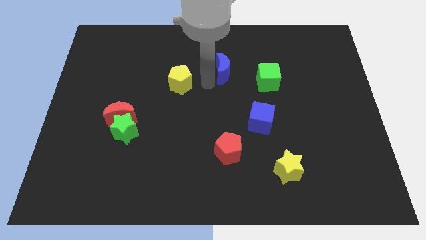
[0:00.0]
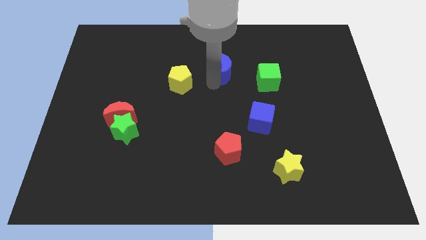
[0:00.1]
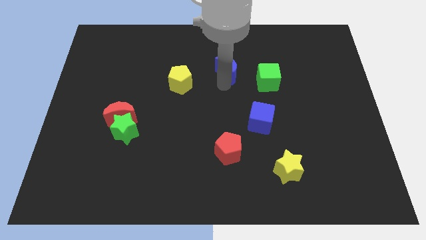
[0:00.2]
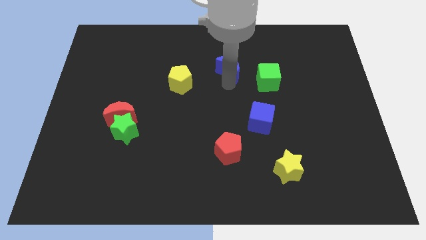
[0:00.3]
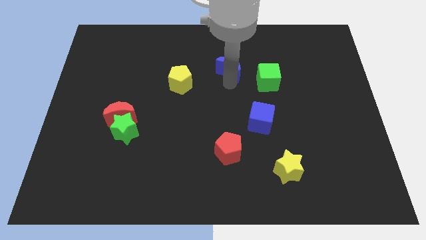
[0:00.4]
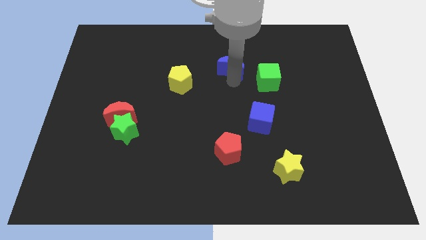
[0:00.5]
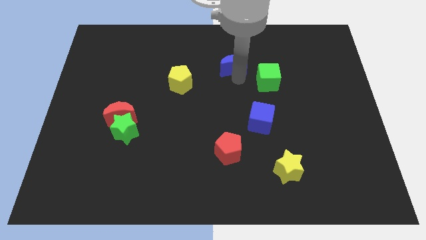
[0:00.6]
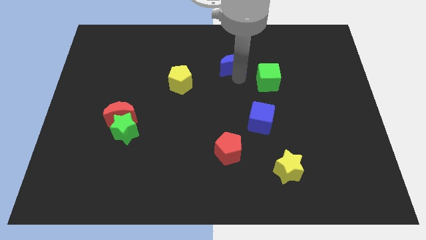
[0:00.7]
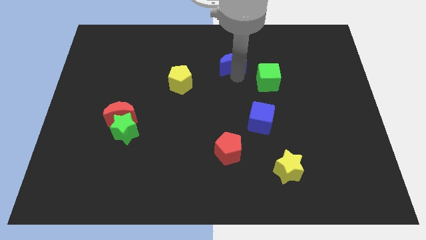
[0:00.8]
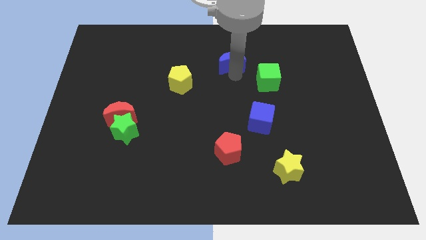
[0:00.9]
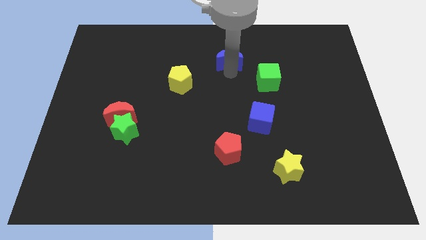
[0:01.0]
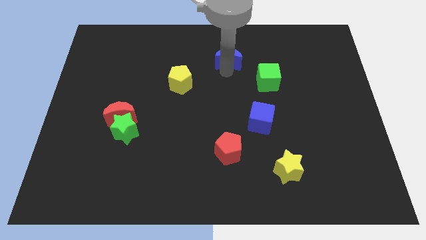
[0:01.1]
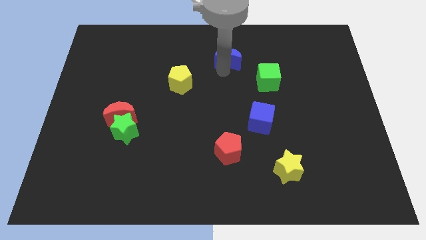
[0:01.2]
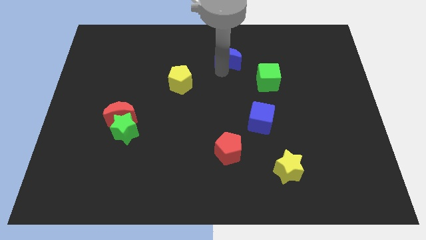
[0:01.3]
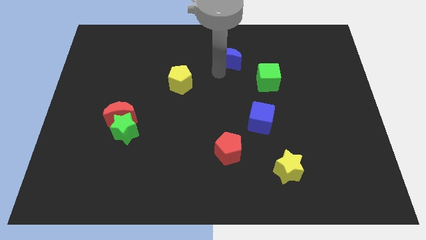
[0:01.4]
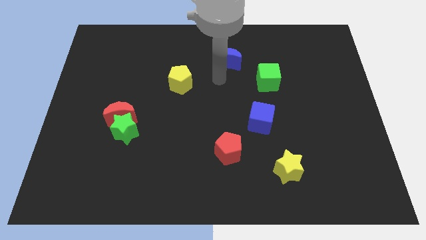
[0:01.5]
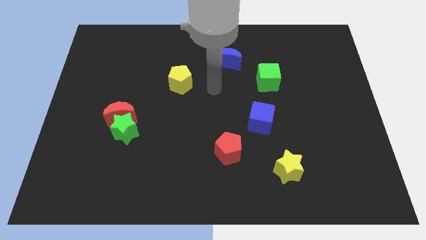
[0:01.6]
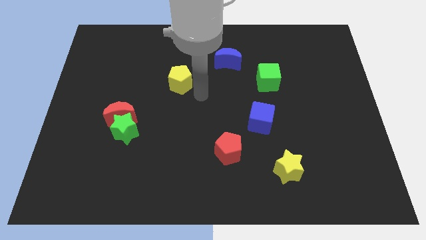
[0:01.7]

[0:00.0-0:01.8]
slightly push the blue crescent to the top of the board

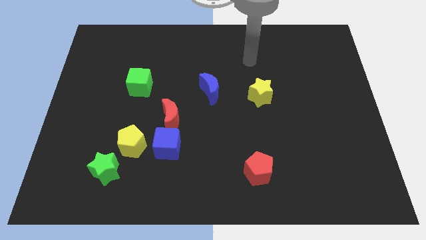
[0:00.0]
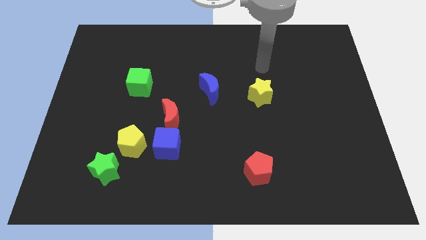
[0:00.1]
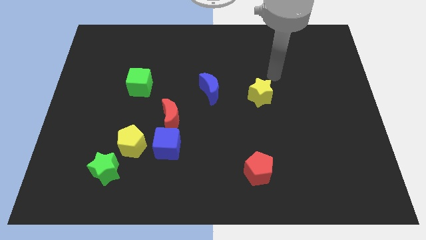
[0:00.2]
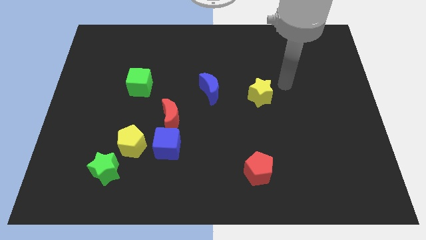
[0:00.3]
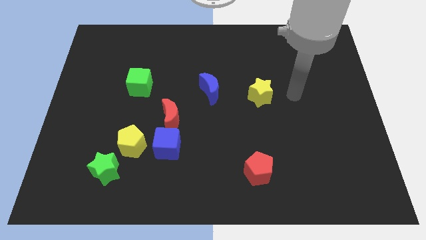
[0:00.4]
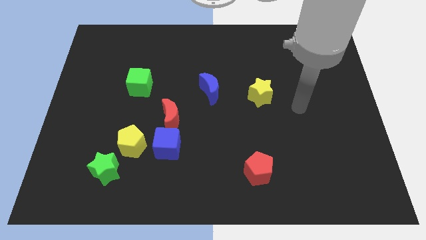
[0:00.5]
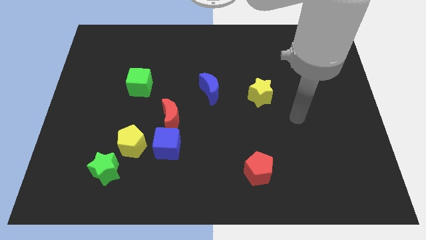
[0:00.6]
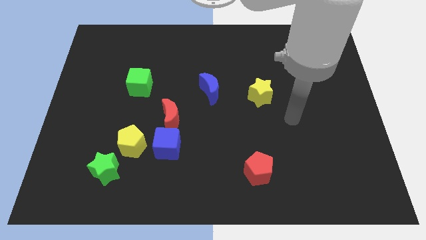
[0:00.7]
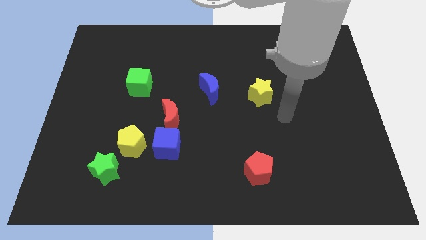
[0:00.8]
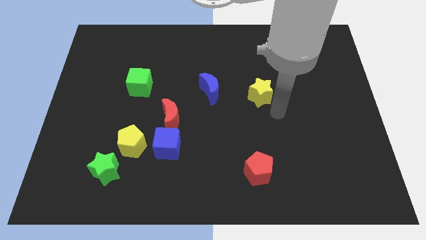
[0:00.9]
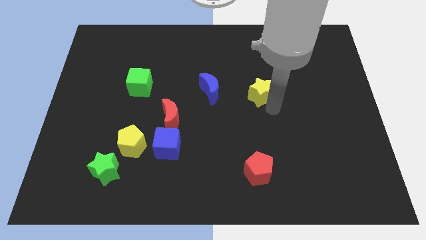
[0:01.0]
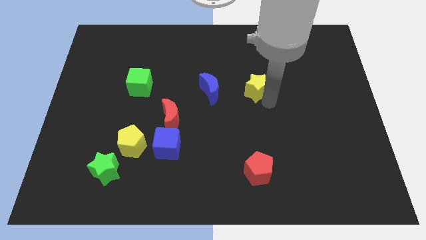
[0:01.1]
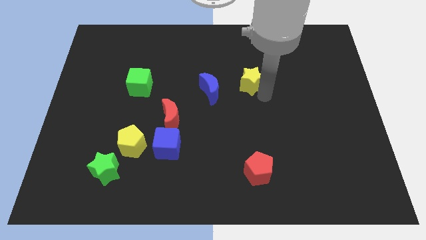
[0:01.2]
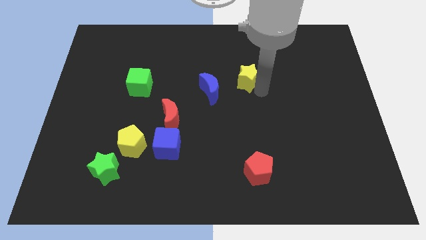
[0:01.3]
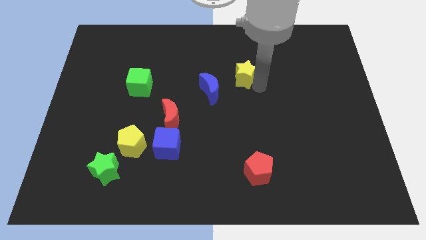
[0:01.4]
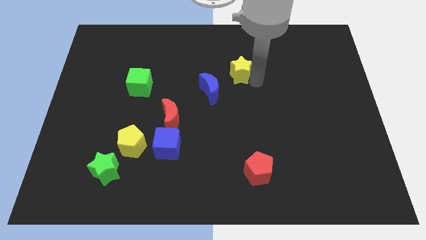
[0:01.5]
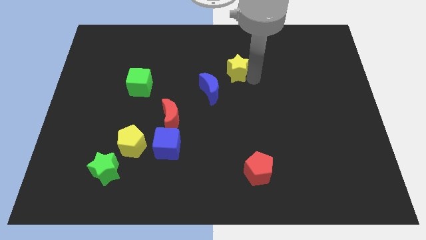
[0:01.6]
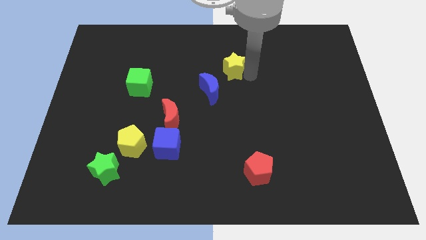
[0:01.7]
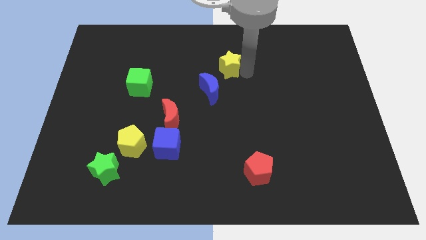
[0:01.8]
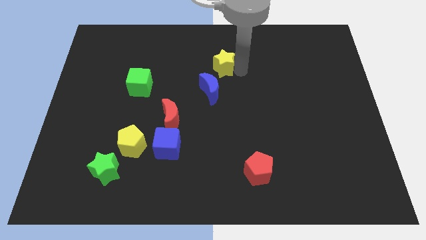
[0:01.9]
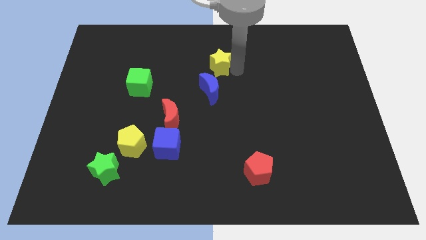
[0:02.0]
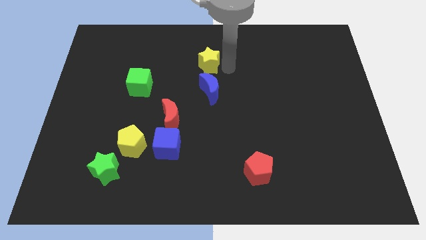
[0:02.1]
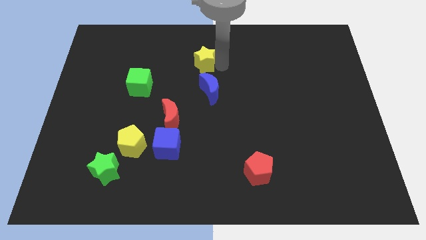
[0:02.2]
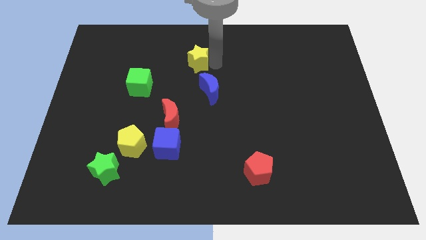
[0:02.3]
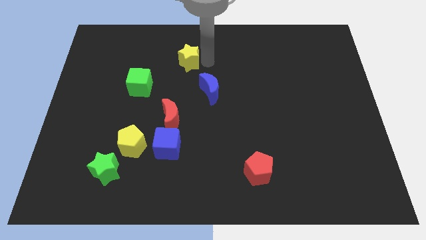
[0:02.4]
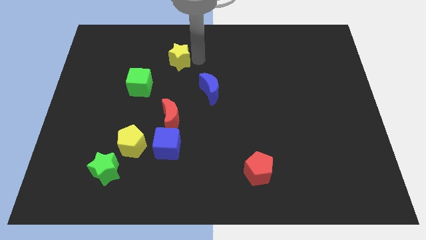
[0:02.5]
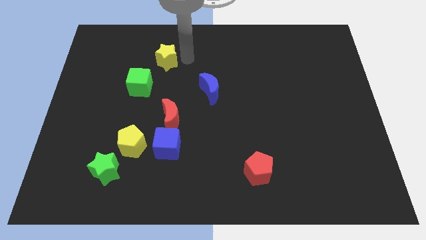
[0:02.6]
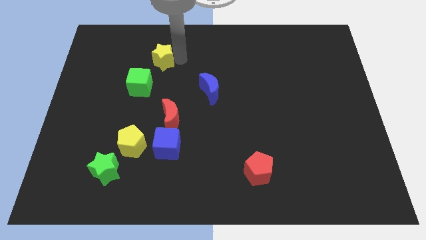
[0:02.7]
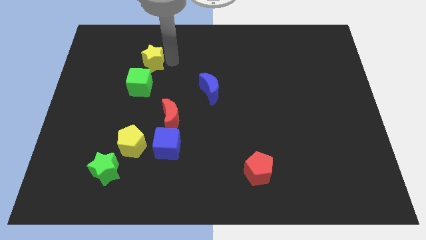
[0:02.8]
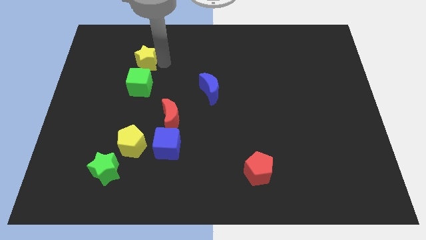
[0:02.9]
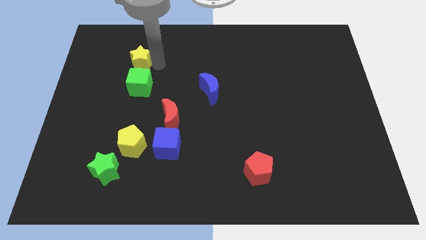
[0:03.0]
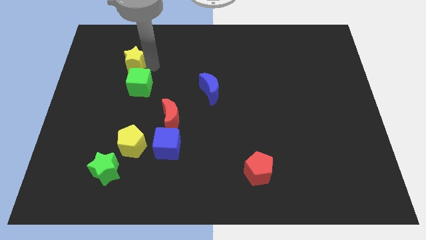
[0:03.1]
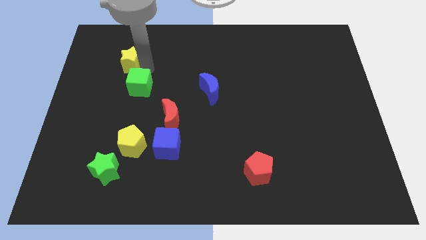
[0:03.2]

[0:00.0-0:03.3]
push the yellow star to the top left side of the green cube

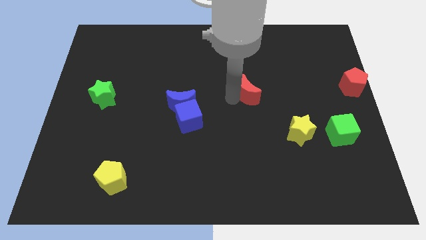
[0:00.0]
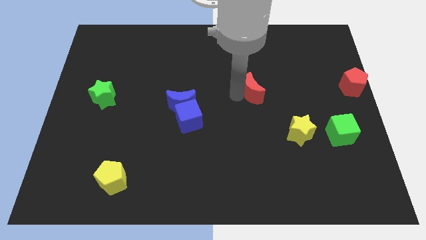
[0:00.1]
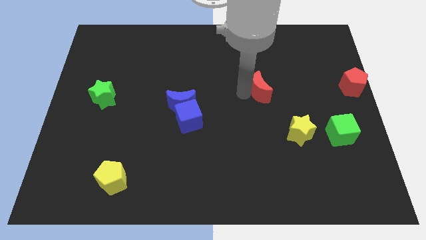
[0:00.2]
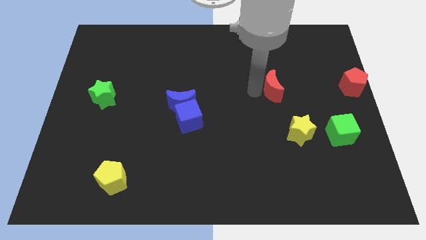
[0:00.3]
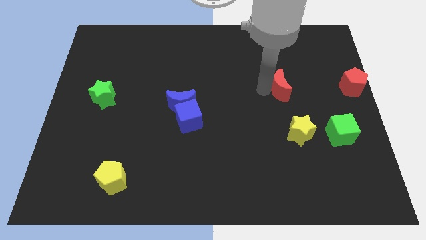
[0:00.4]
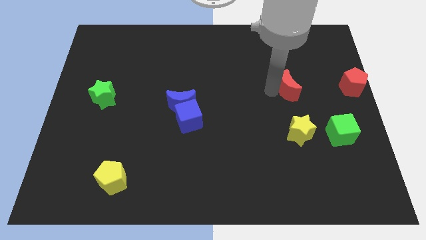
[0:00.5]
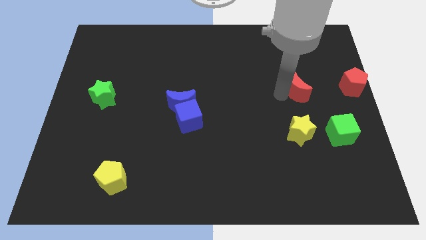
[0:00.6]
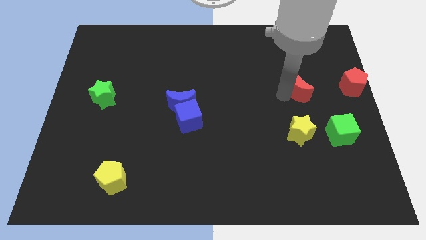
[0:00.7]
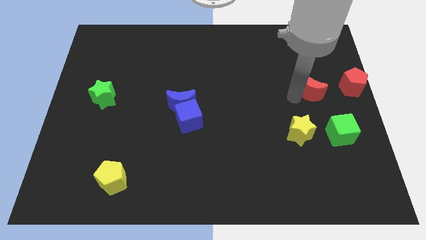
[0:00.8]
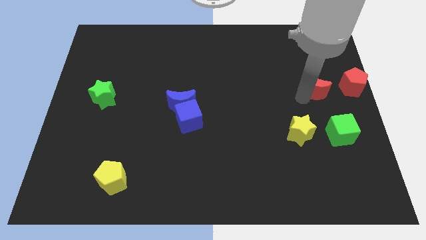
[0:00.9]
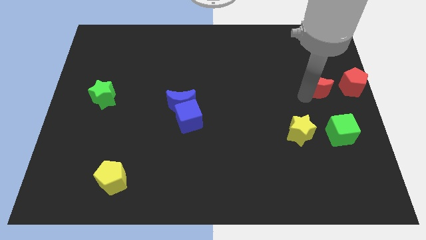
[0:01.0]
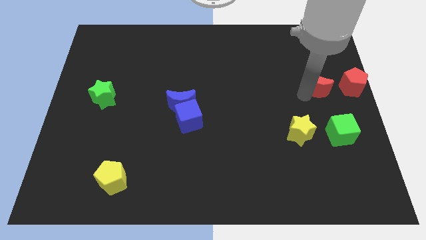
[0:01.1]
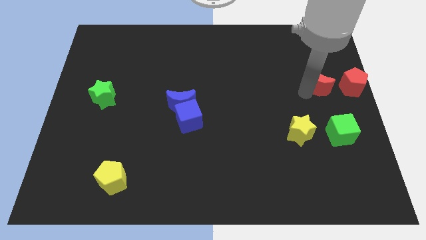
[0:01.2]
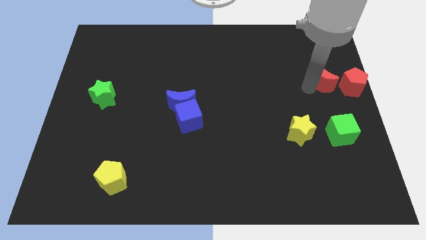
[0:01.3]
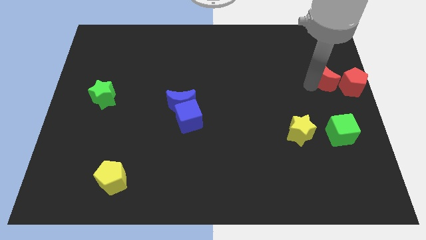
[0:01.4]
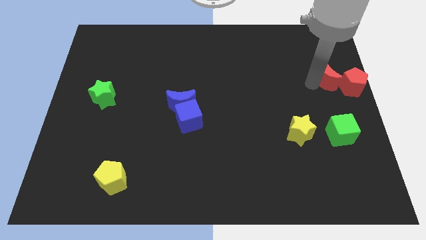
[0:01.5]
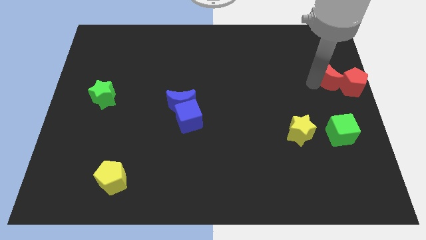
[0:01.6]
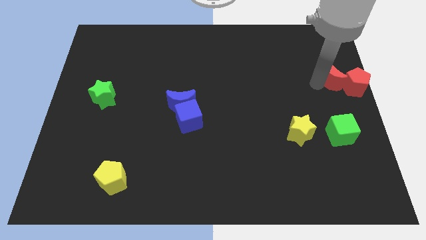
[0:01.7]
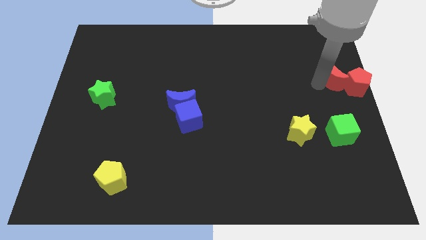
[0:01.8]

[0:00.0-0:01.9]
push the red crescent into the red pentagon

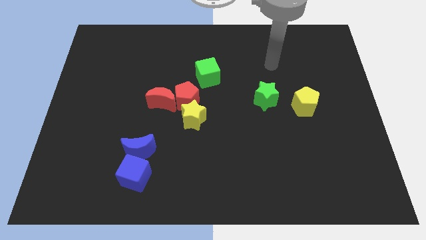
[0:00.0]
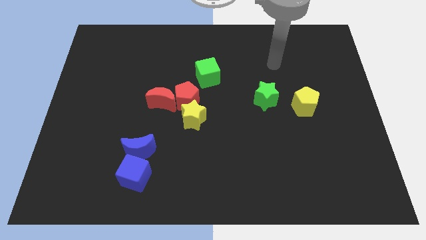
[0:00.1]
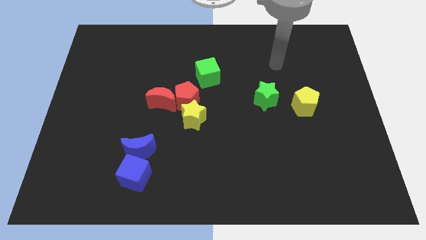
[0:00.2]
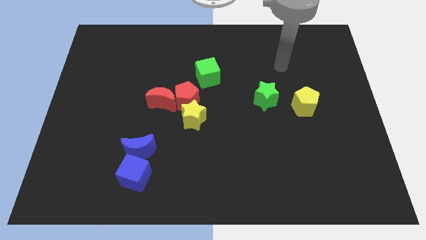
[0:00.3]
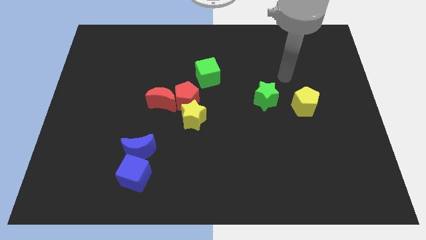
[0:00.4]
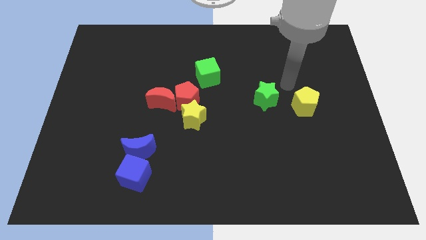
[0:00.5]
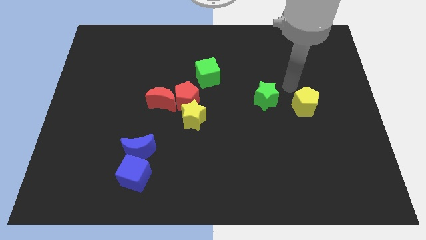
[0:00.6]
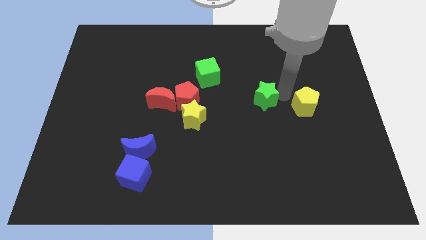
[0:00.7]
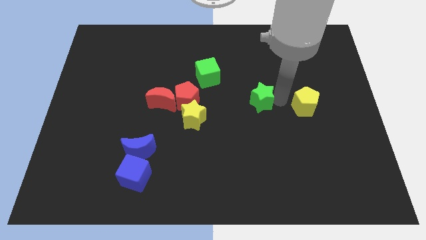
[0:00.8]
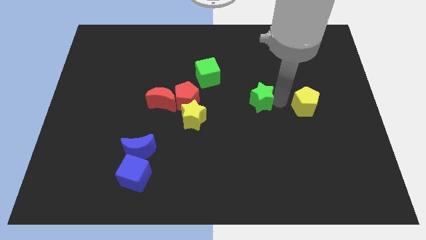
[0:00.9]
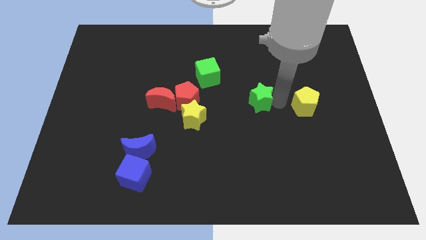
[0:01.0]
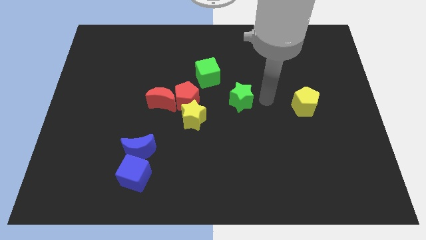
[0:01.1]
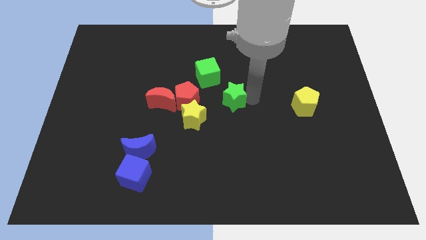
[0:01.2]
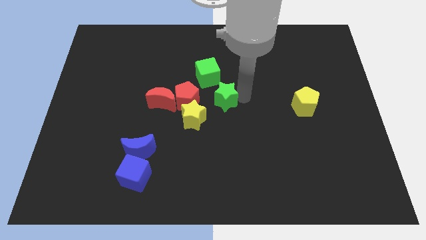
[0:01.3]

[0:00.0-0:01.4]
move the green star below the green cube

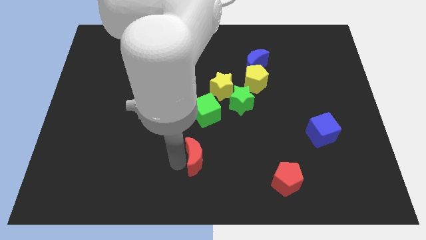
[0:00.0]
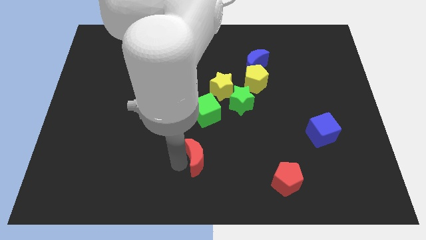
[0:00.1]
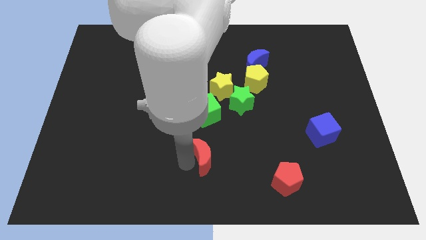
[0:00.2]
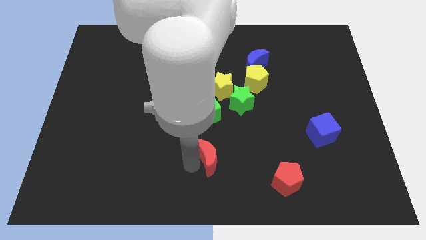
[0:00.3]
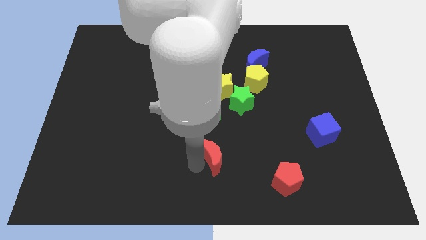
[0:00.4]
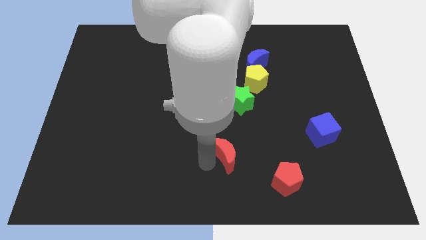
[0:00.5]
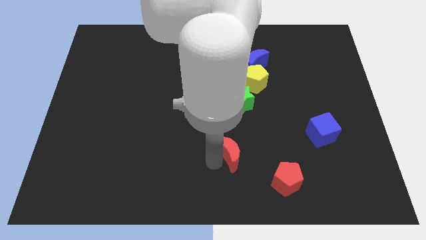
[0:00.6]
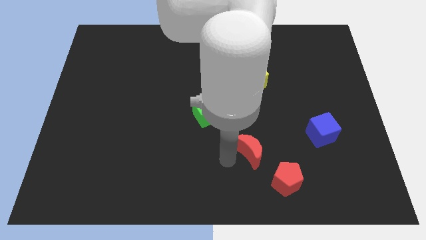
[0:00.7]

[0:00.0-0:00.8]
place red crescent in between red pentagon and green cube
